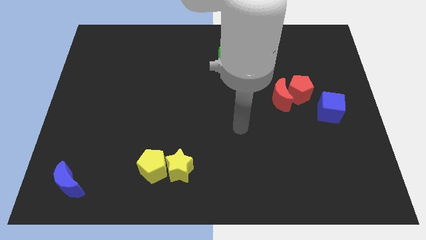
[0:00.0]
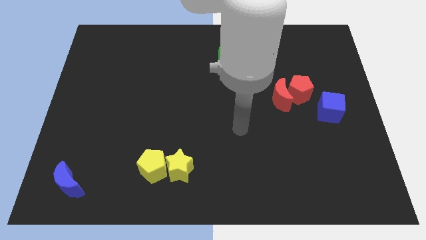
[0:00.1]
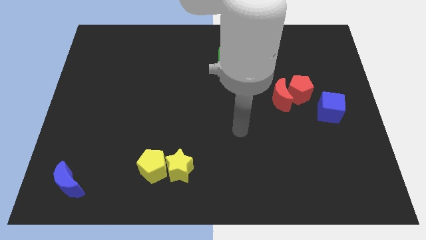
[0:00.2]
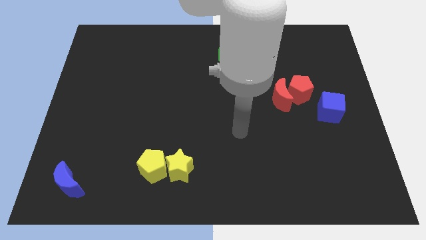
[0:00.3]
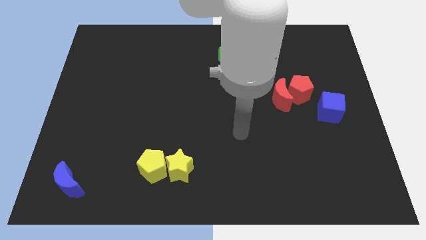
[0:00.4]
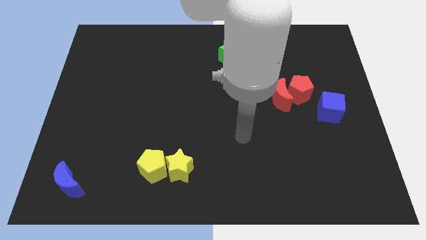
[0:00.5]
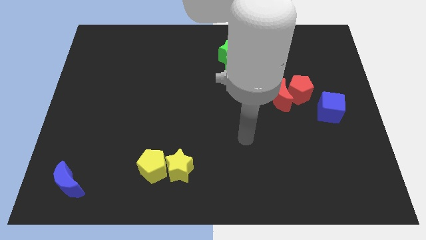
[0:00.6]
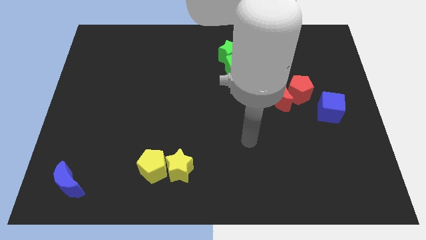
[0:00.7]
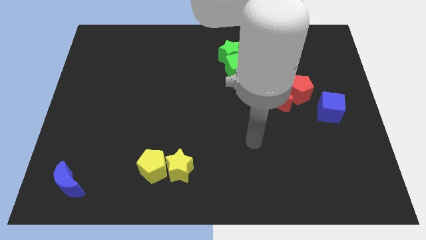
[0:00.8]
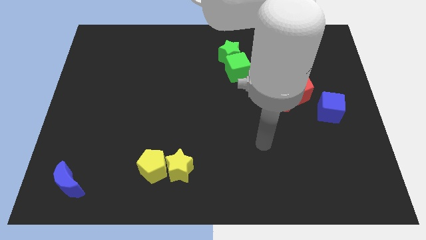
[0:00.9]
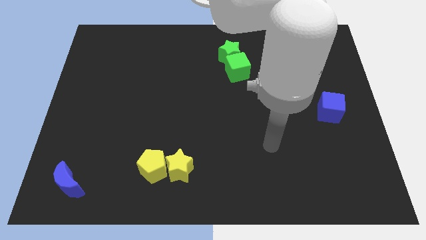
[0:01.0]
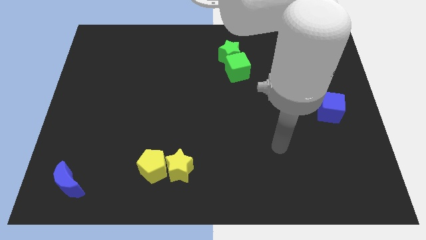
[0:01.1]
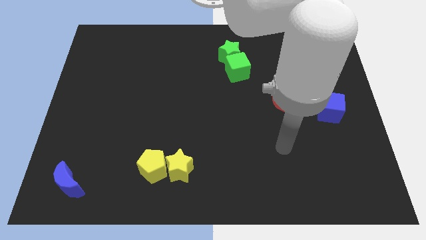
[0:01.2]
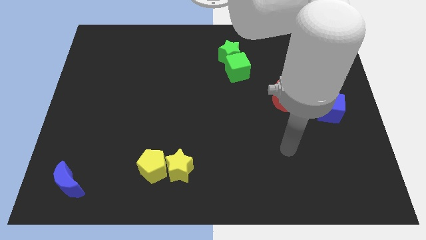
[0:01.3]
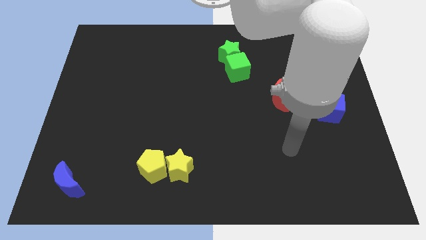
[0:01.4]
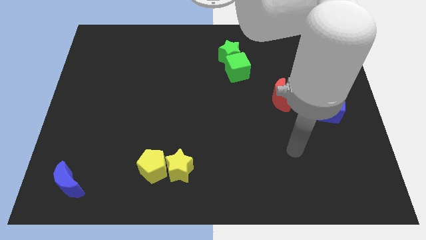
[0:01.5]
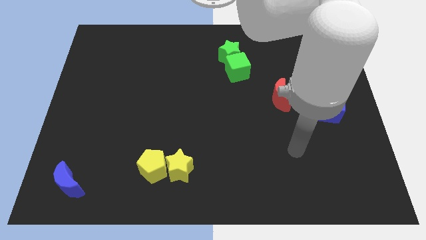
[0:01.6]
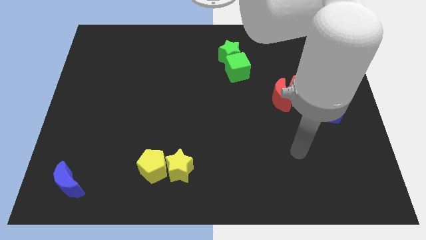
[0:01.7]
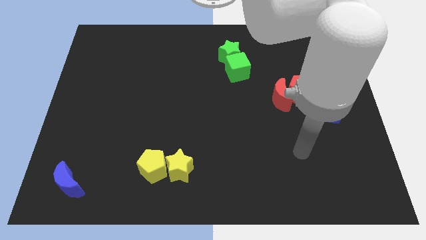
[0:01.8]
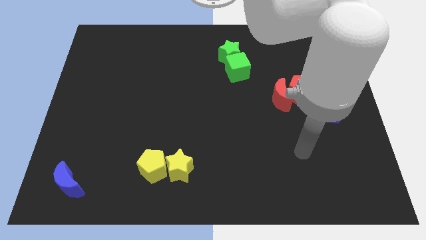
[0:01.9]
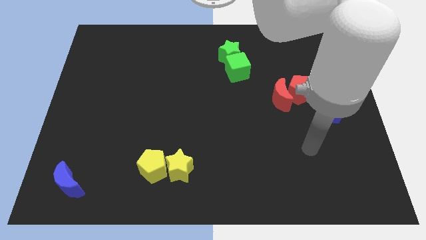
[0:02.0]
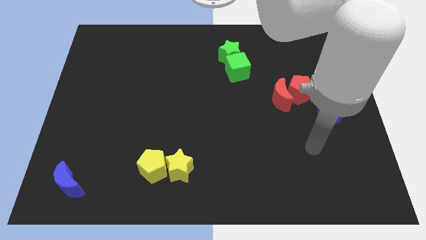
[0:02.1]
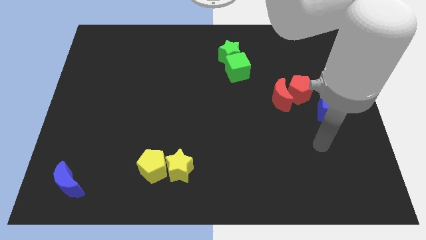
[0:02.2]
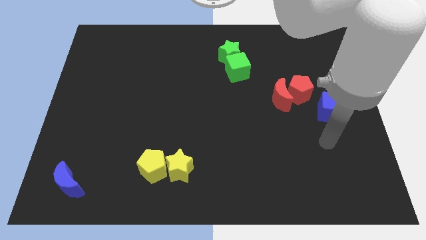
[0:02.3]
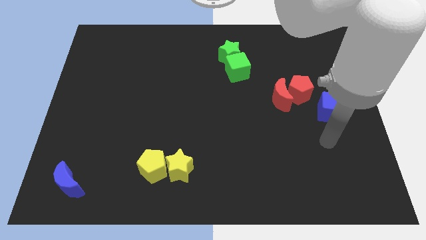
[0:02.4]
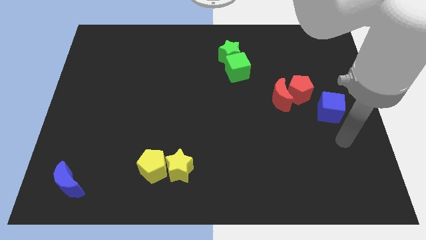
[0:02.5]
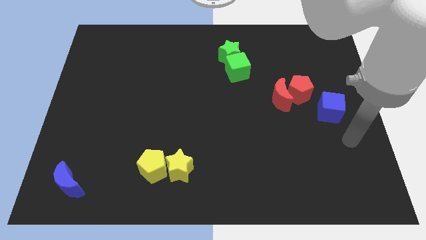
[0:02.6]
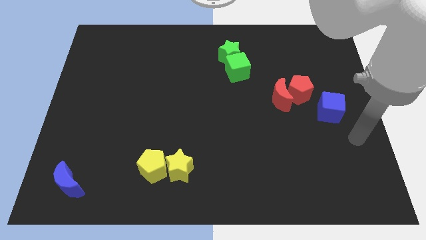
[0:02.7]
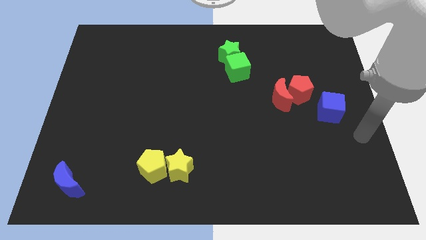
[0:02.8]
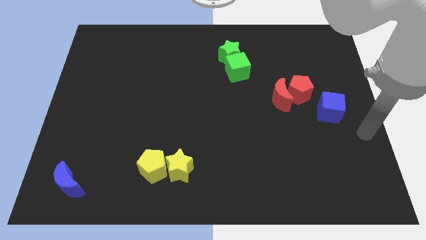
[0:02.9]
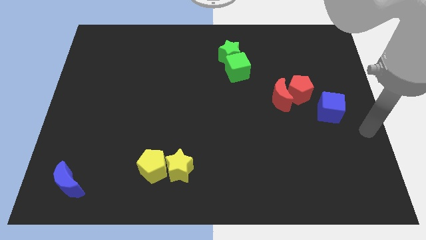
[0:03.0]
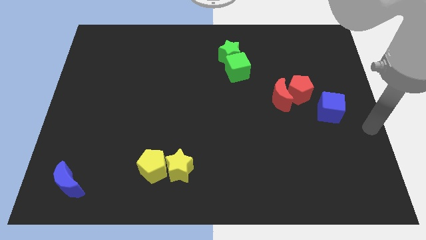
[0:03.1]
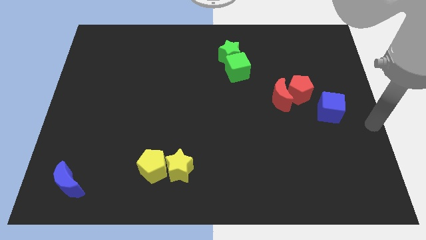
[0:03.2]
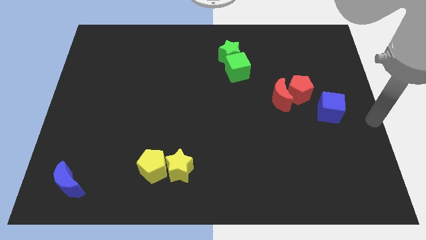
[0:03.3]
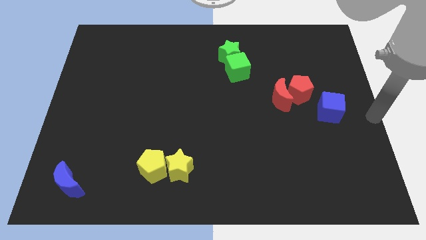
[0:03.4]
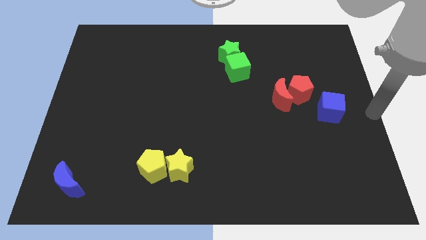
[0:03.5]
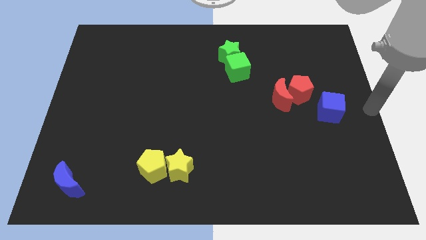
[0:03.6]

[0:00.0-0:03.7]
move your hand at the center right of the board

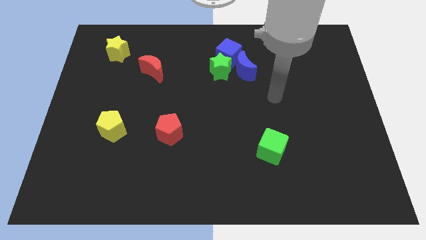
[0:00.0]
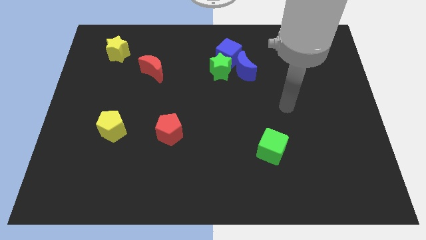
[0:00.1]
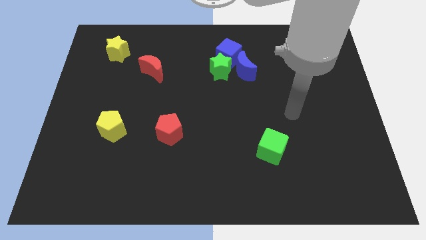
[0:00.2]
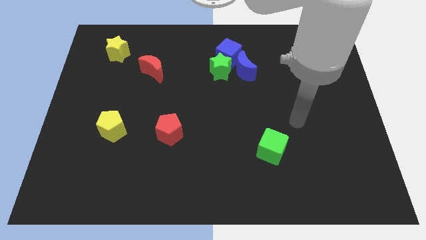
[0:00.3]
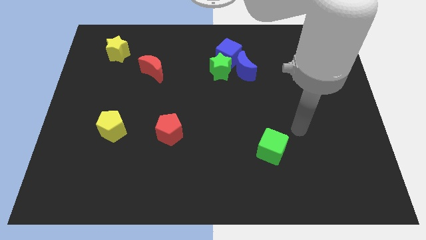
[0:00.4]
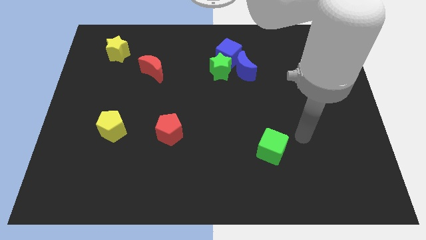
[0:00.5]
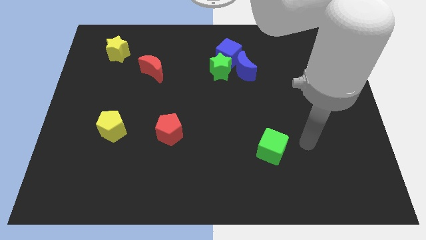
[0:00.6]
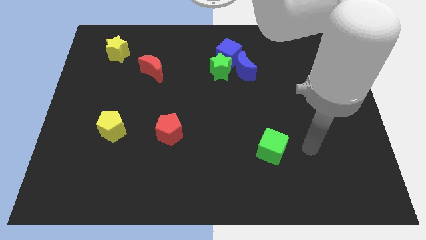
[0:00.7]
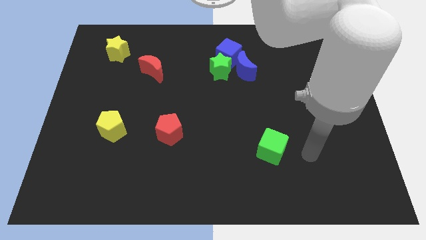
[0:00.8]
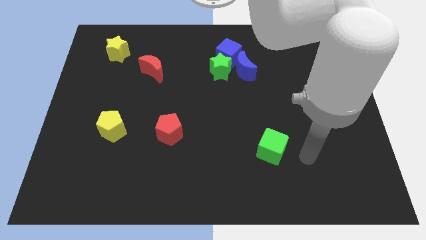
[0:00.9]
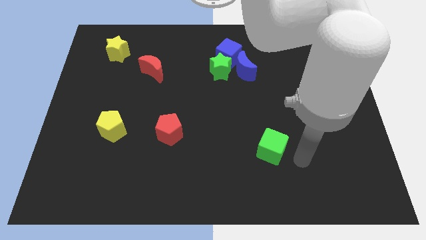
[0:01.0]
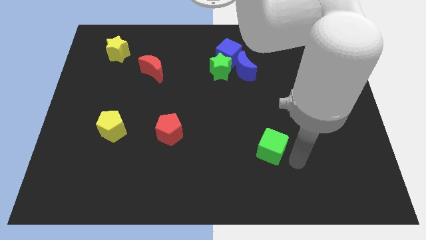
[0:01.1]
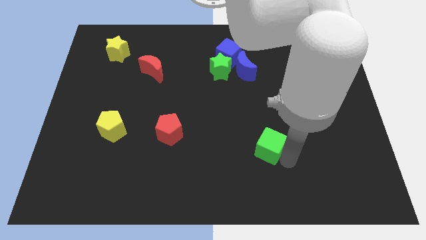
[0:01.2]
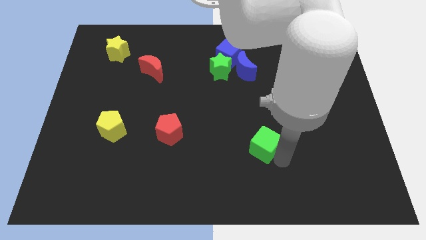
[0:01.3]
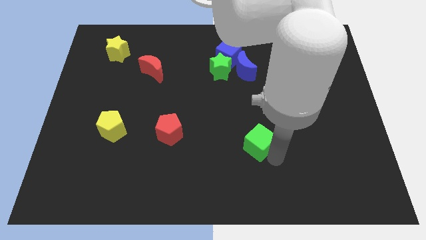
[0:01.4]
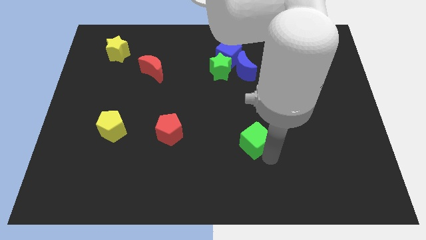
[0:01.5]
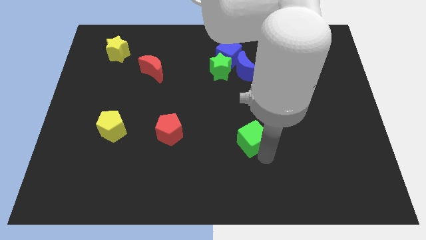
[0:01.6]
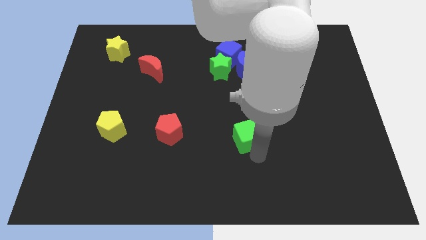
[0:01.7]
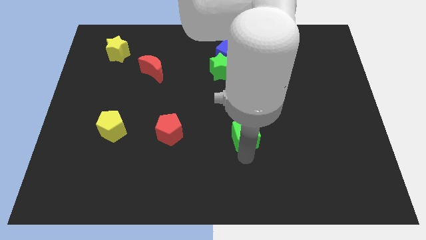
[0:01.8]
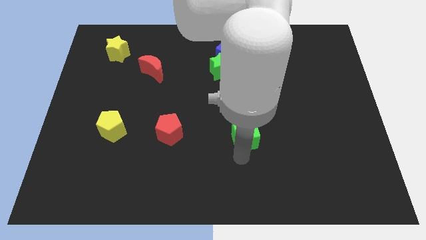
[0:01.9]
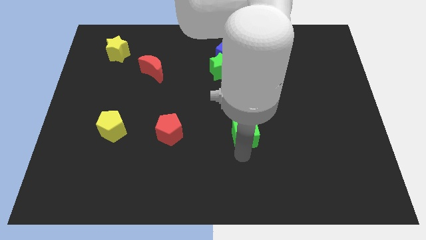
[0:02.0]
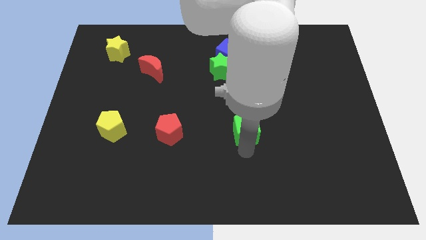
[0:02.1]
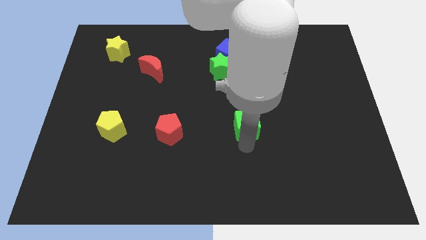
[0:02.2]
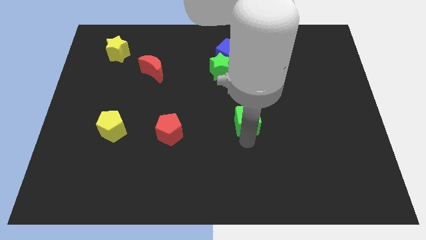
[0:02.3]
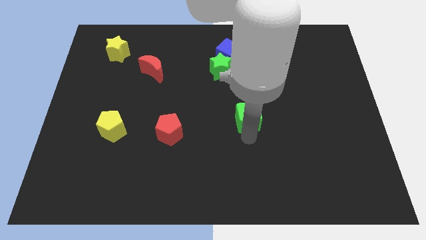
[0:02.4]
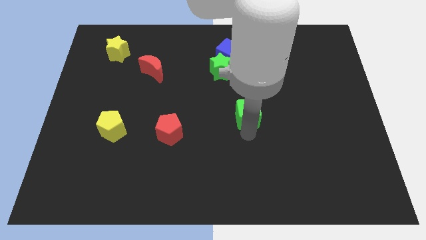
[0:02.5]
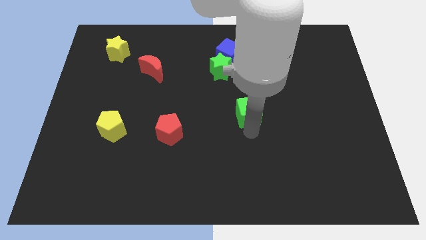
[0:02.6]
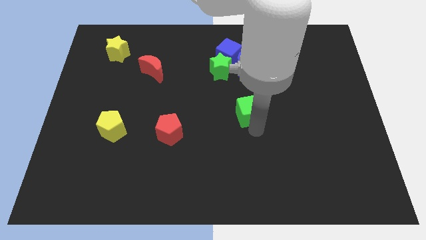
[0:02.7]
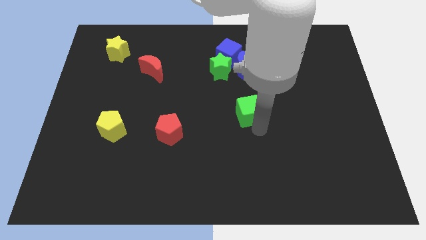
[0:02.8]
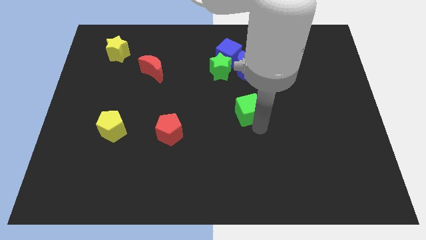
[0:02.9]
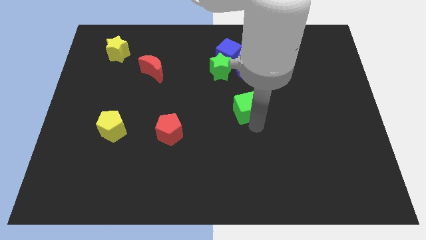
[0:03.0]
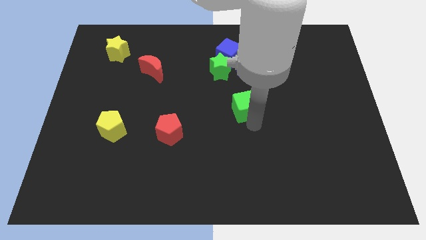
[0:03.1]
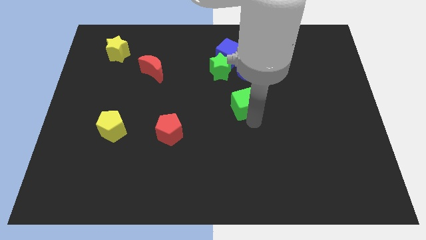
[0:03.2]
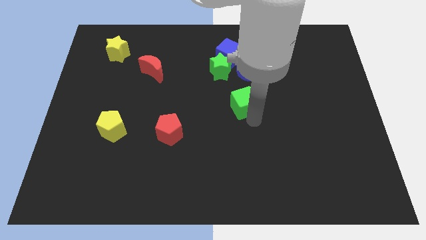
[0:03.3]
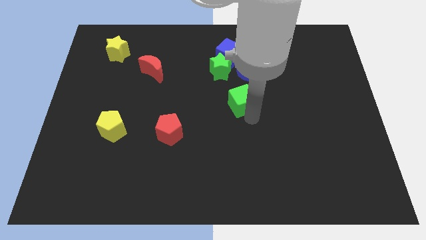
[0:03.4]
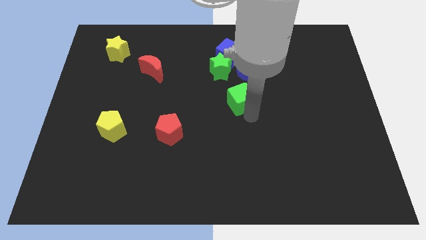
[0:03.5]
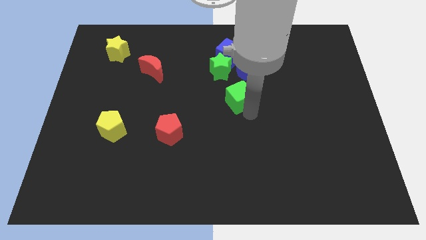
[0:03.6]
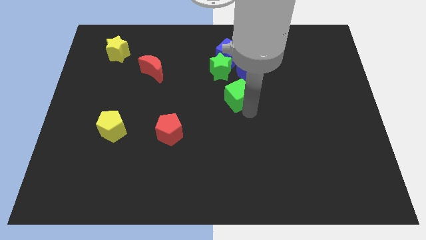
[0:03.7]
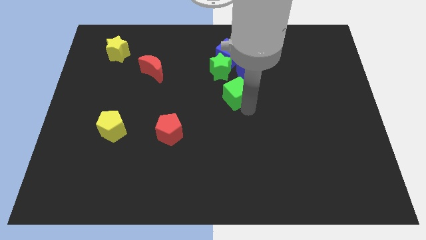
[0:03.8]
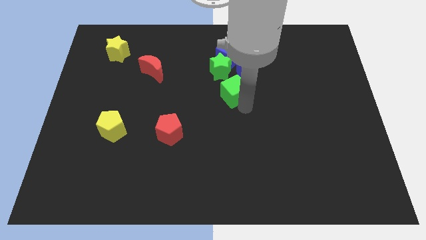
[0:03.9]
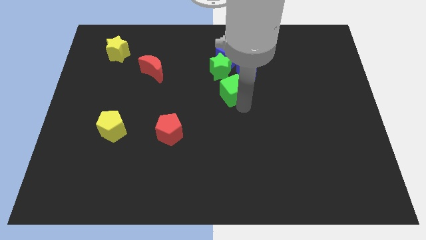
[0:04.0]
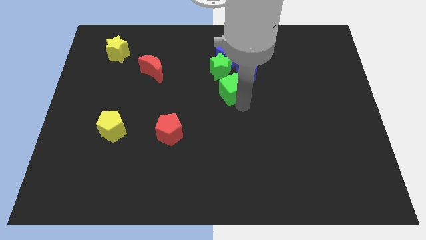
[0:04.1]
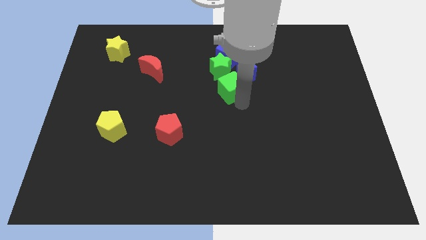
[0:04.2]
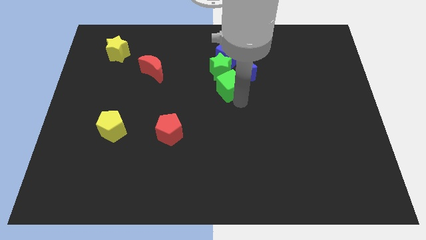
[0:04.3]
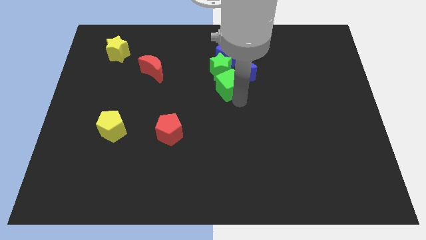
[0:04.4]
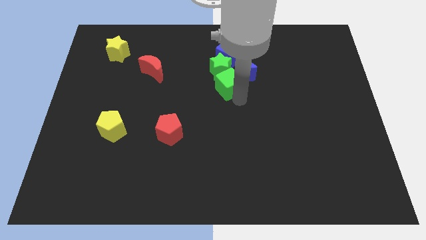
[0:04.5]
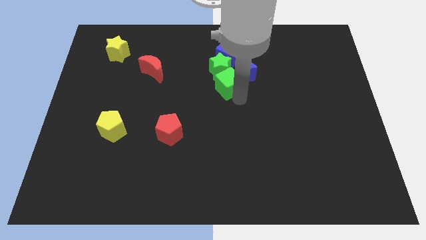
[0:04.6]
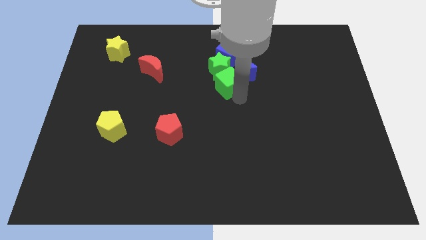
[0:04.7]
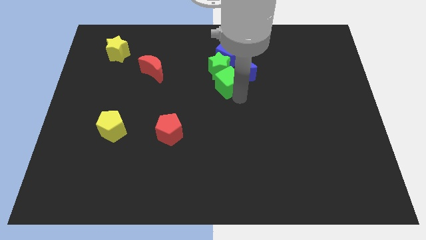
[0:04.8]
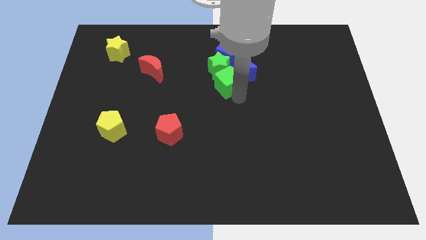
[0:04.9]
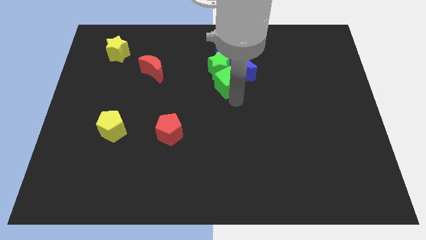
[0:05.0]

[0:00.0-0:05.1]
move green cube into the green star and blue crescent

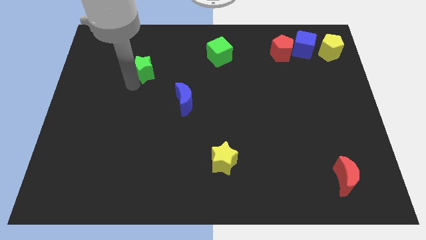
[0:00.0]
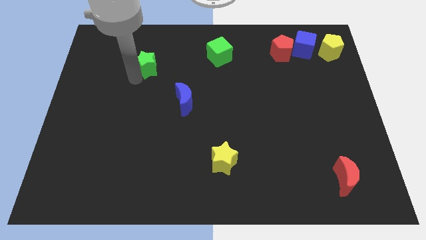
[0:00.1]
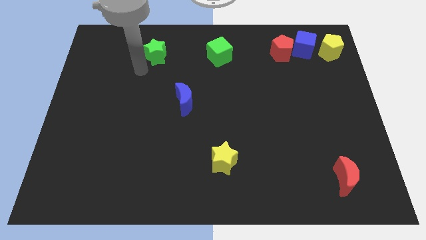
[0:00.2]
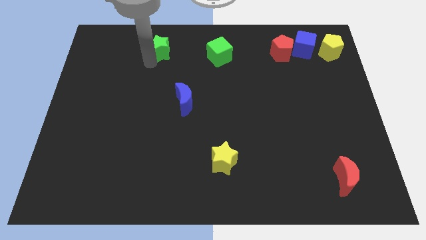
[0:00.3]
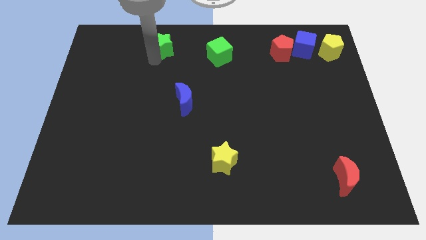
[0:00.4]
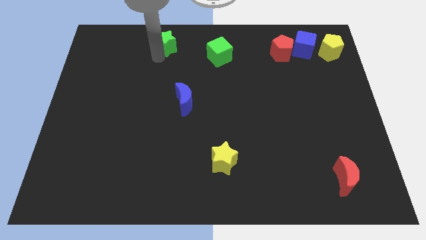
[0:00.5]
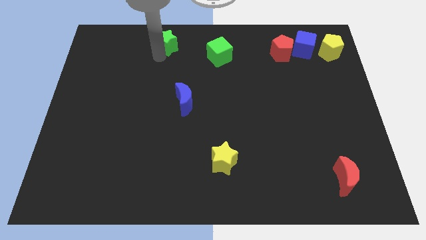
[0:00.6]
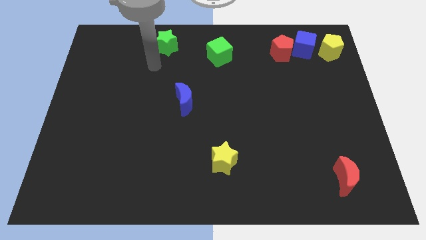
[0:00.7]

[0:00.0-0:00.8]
move the green star diagonally top left to green cube
